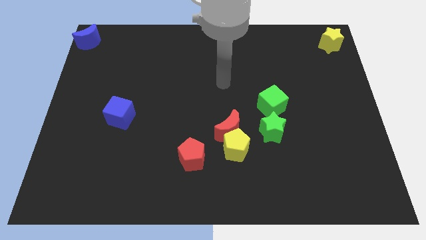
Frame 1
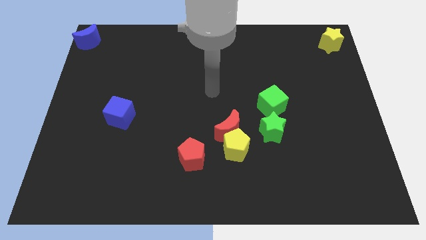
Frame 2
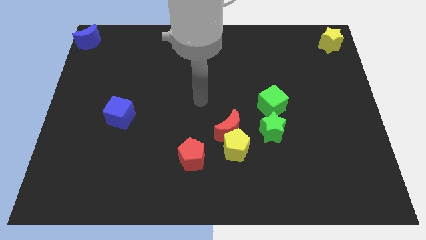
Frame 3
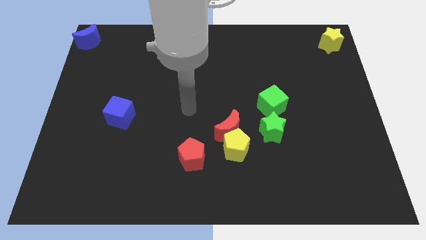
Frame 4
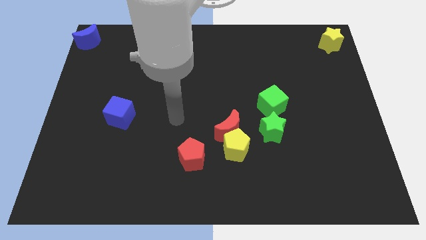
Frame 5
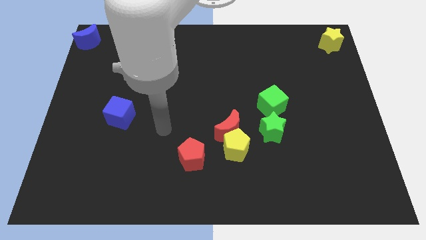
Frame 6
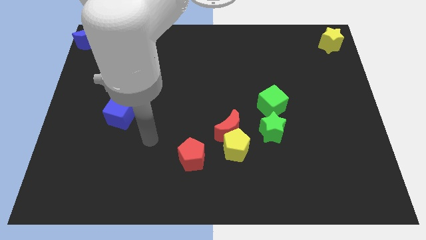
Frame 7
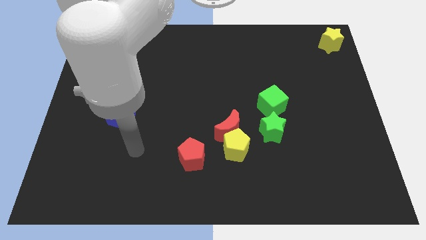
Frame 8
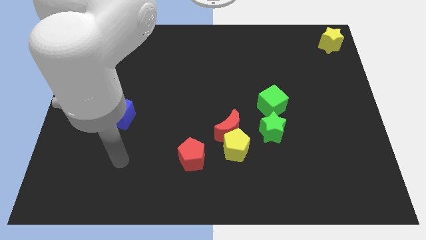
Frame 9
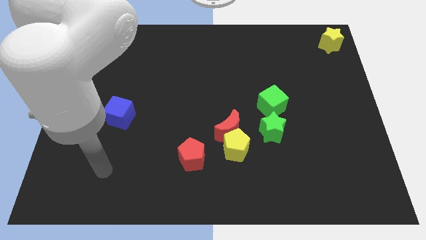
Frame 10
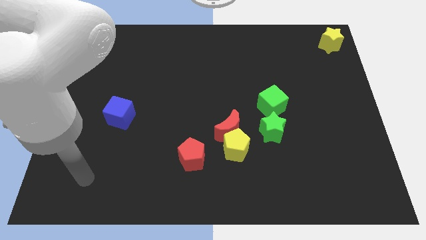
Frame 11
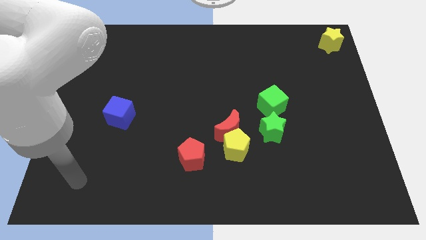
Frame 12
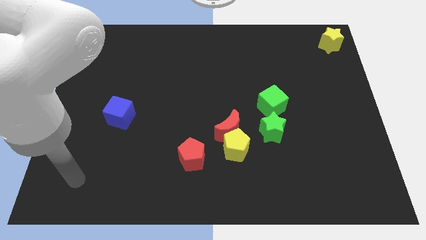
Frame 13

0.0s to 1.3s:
move your hand towards the bottom right corner of the board

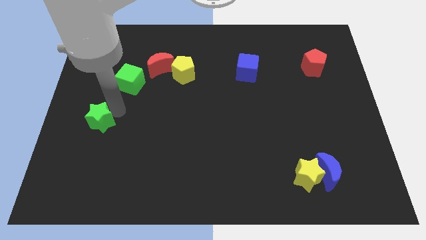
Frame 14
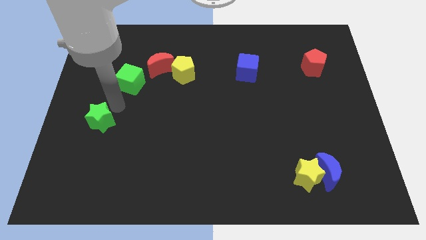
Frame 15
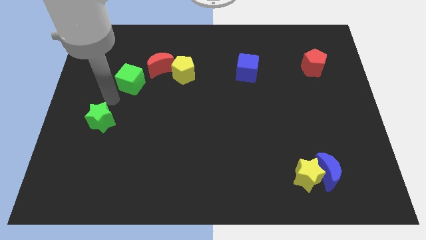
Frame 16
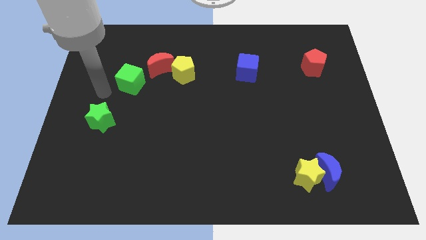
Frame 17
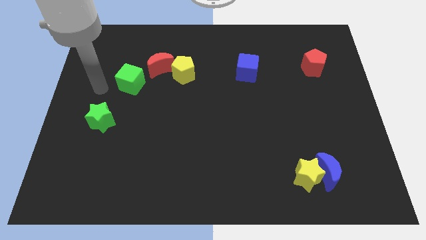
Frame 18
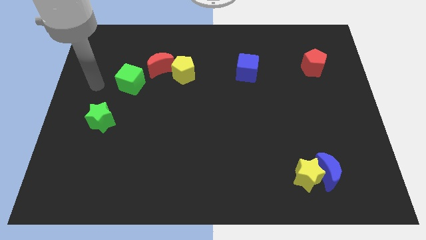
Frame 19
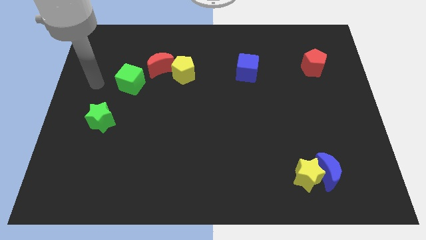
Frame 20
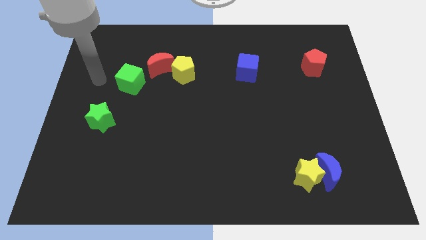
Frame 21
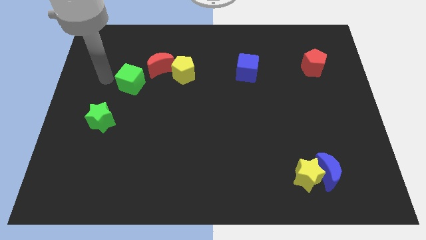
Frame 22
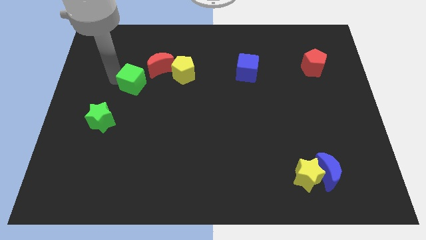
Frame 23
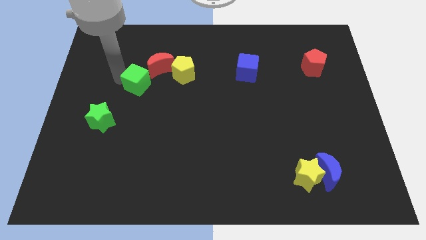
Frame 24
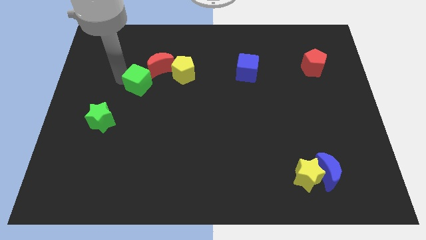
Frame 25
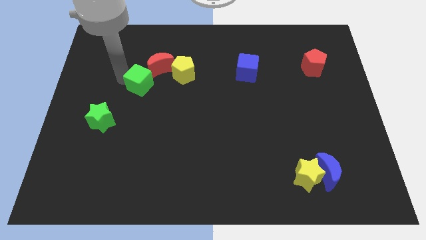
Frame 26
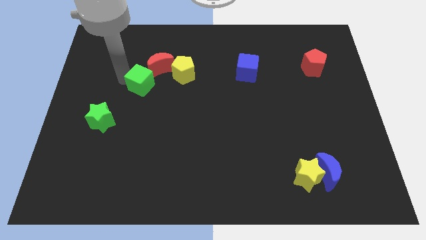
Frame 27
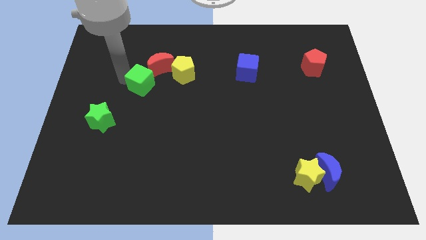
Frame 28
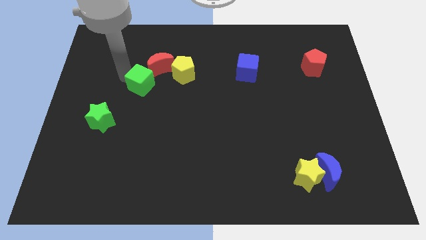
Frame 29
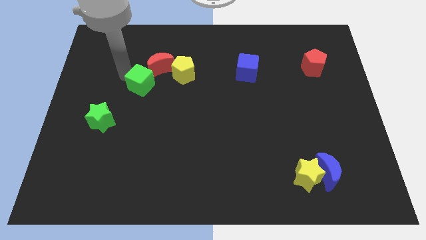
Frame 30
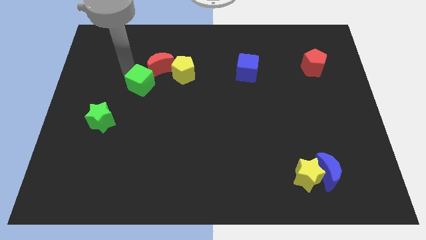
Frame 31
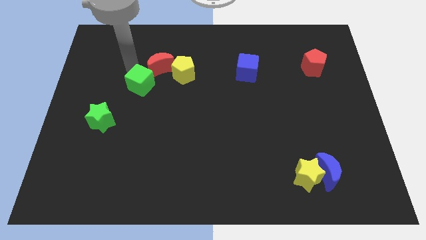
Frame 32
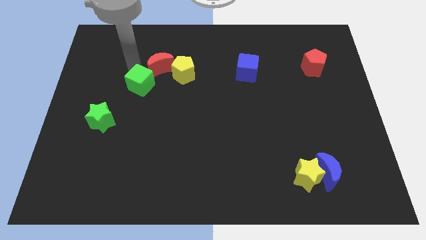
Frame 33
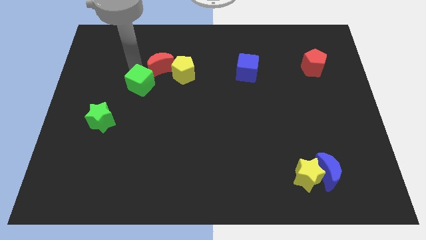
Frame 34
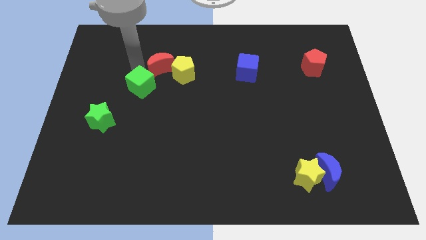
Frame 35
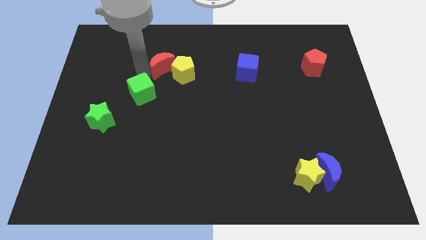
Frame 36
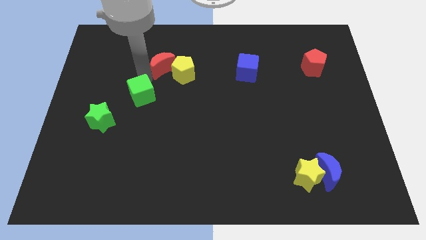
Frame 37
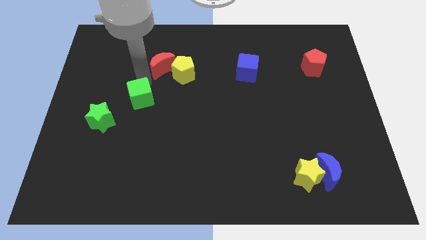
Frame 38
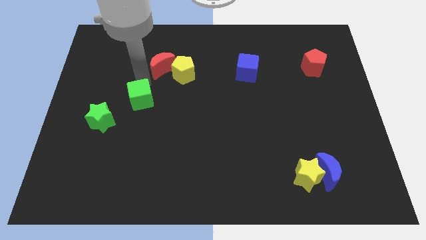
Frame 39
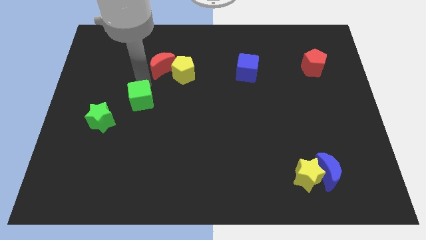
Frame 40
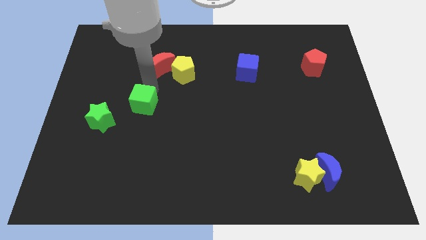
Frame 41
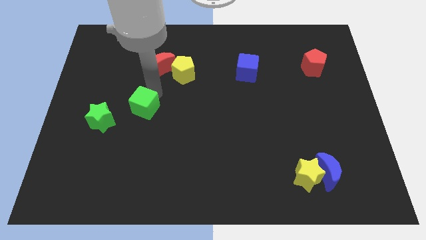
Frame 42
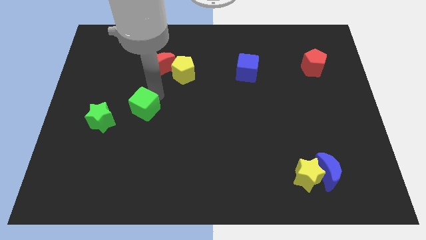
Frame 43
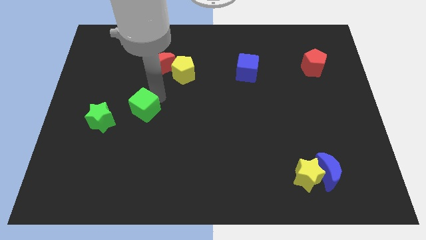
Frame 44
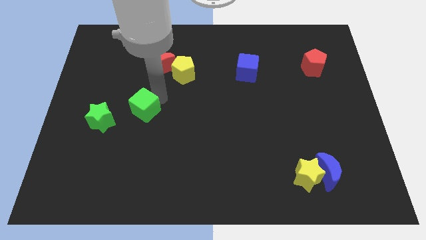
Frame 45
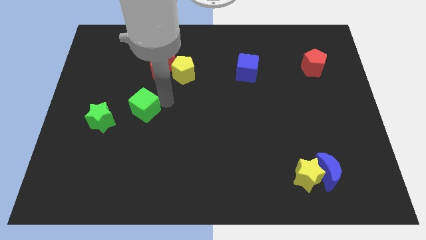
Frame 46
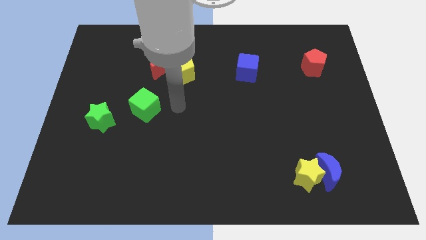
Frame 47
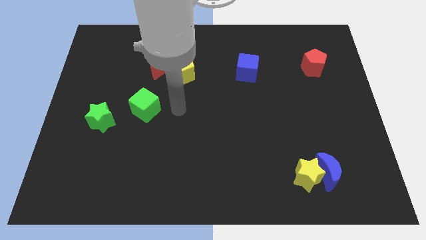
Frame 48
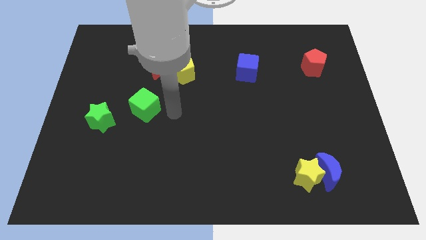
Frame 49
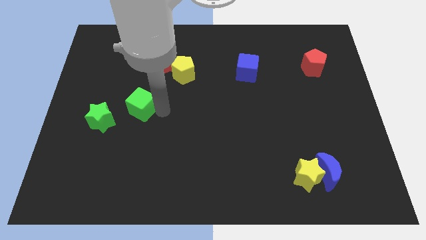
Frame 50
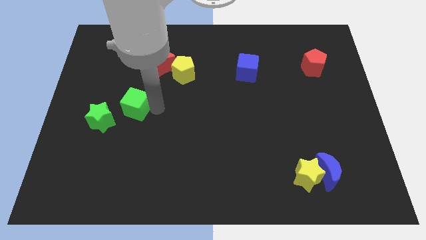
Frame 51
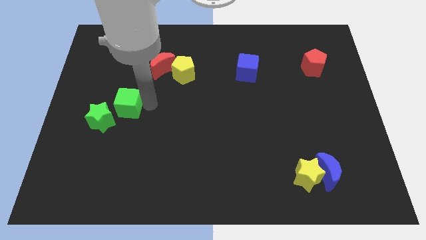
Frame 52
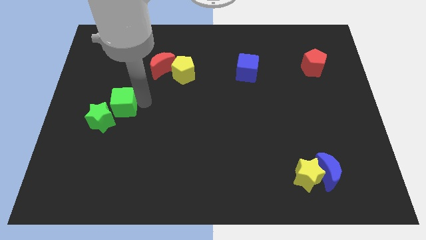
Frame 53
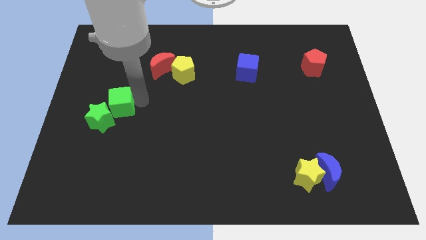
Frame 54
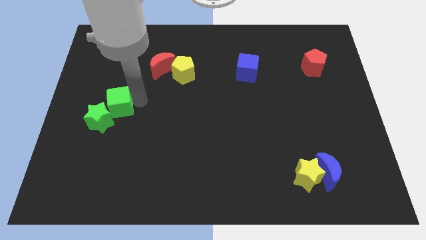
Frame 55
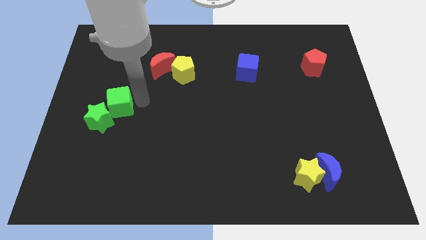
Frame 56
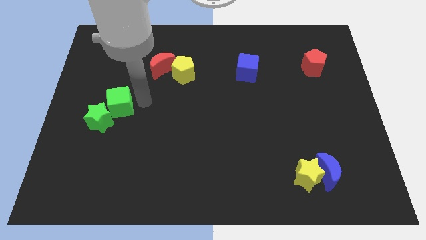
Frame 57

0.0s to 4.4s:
push the green cube to the top right of the green star

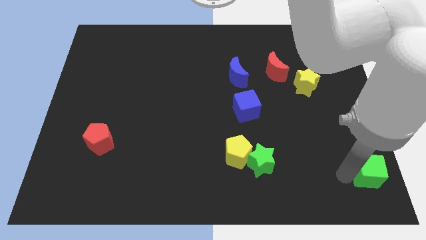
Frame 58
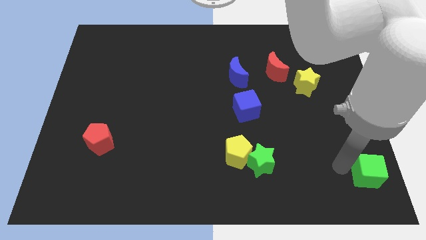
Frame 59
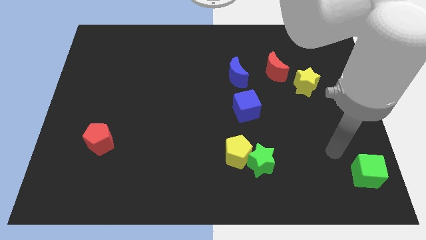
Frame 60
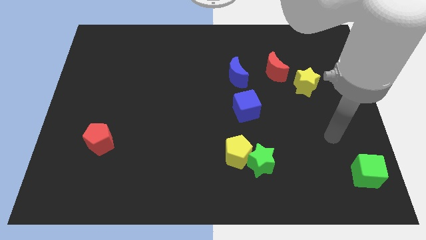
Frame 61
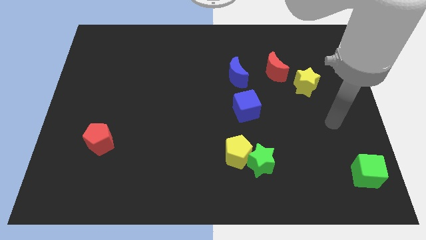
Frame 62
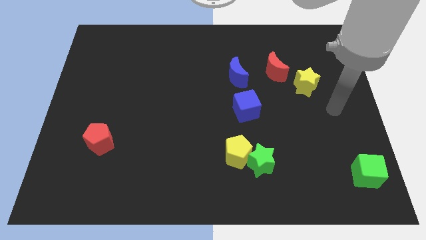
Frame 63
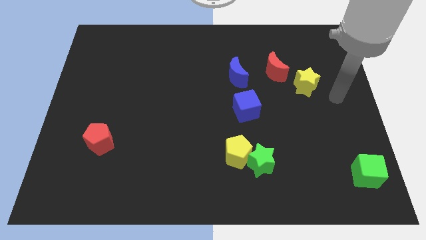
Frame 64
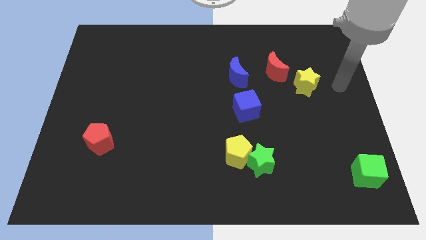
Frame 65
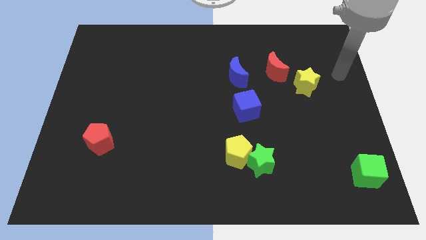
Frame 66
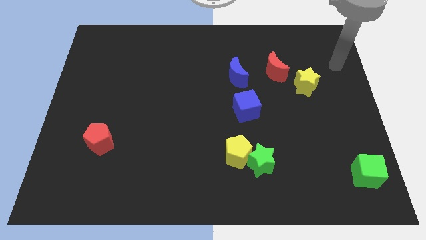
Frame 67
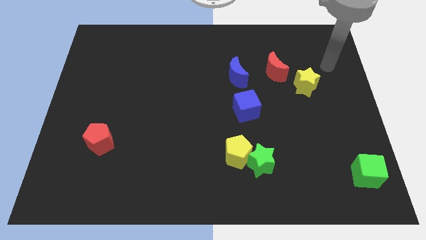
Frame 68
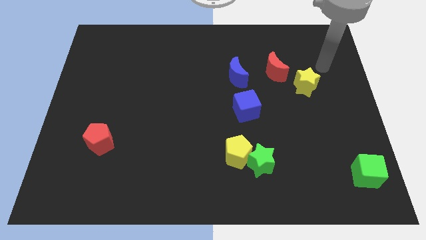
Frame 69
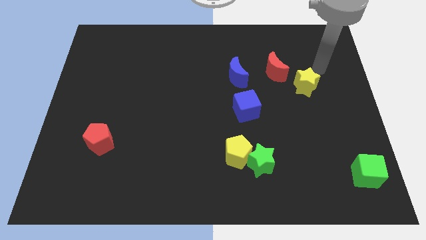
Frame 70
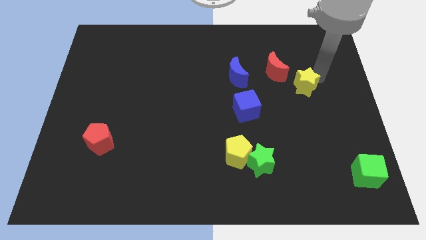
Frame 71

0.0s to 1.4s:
point your arm at the top right side of yellow star

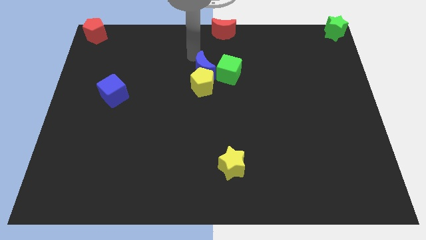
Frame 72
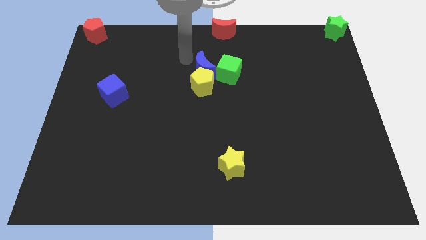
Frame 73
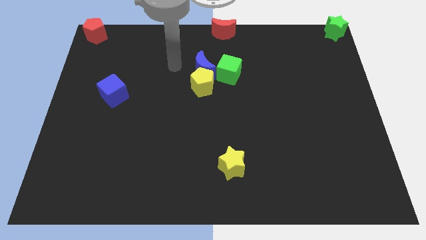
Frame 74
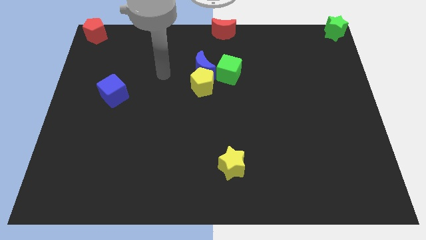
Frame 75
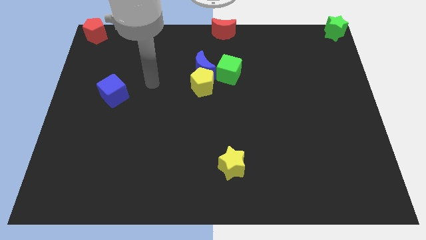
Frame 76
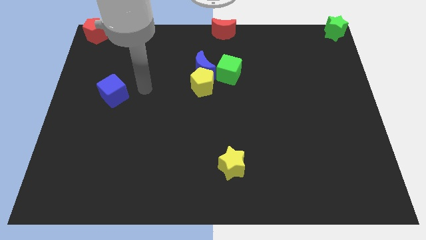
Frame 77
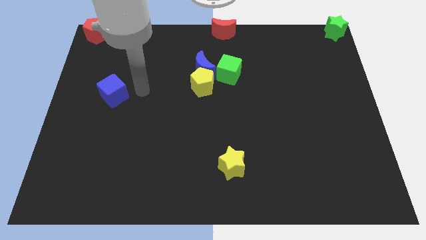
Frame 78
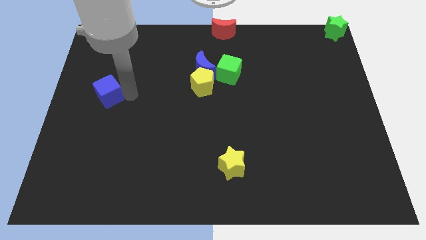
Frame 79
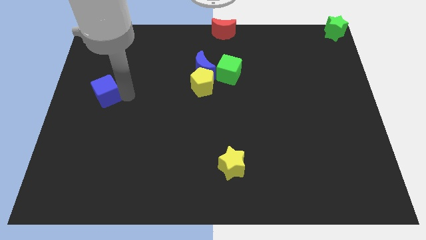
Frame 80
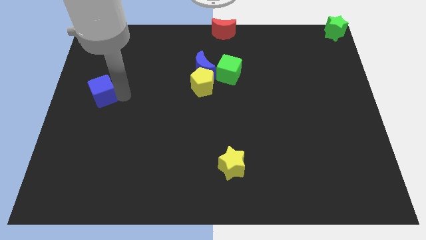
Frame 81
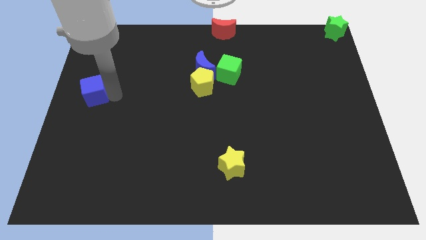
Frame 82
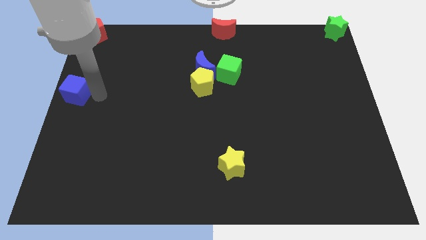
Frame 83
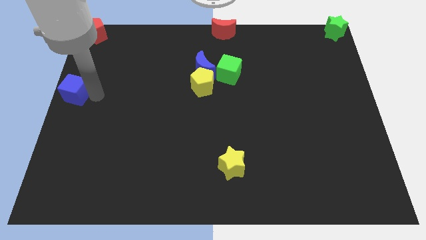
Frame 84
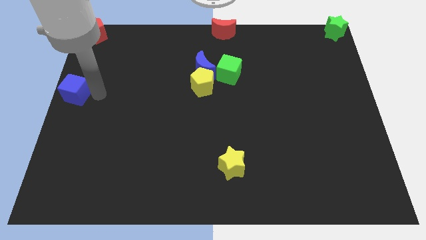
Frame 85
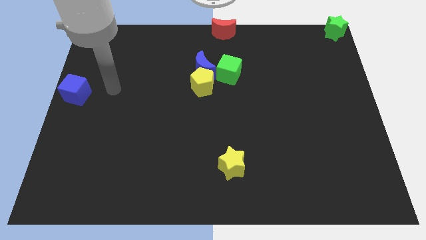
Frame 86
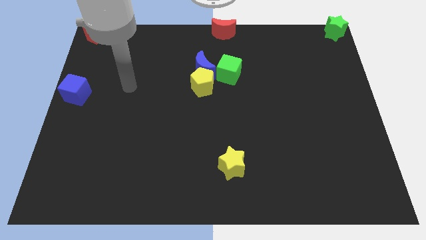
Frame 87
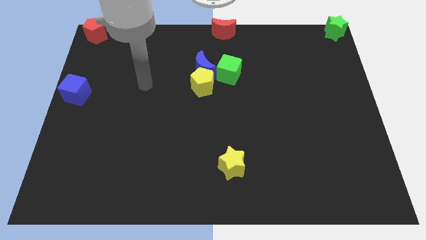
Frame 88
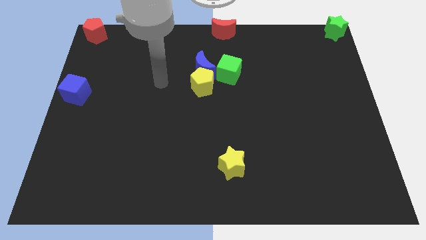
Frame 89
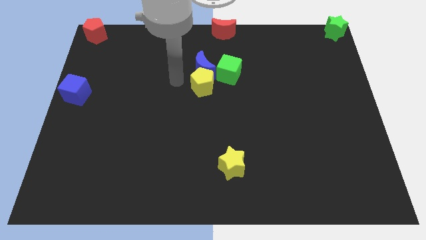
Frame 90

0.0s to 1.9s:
move the blue cube to the left center of the board
